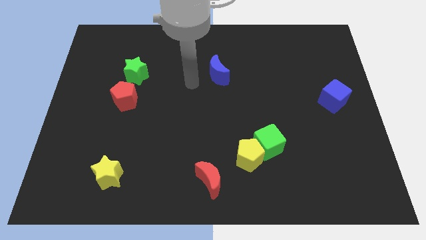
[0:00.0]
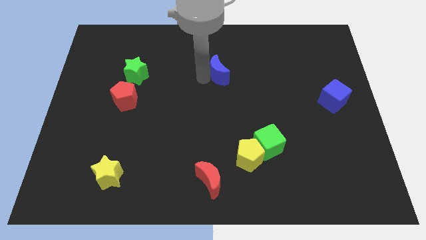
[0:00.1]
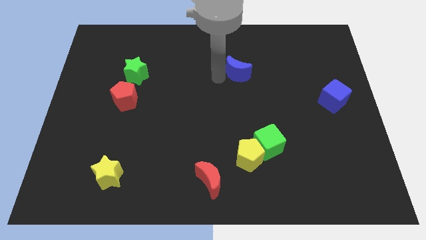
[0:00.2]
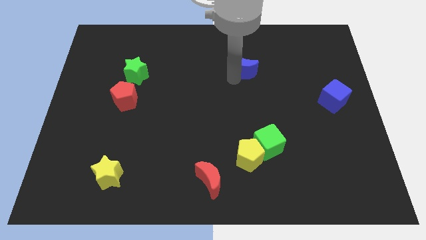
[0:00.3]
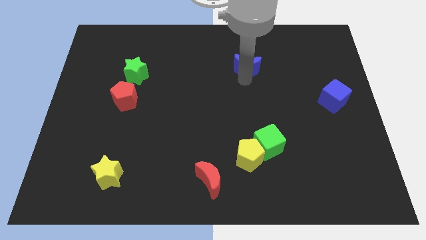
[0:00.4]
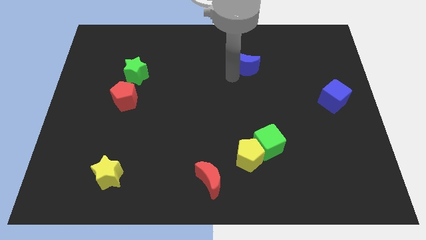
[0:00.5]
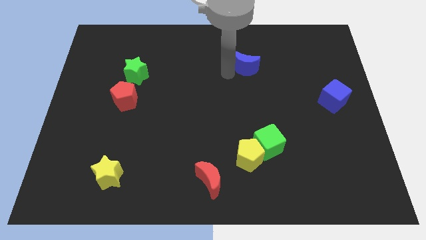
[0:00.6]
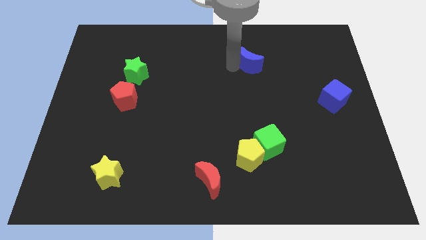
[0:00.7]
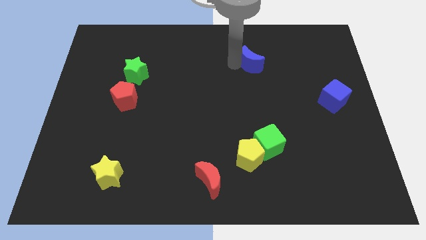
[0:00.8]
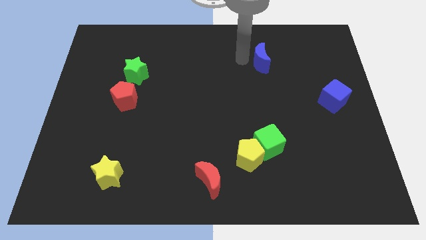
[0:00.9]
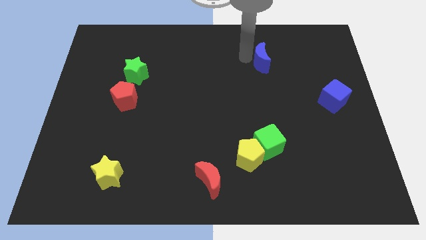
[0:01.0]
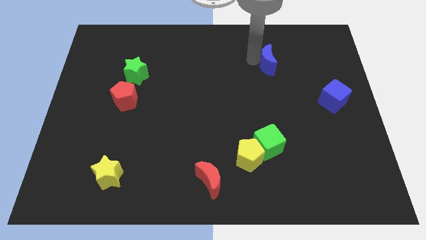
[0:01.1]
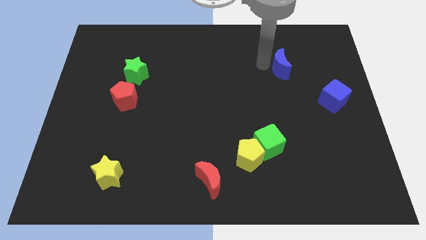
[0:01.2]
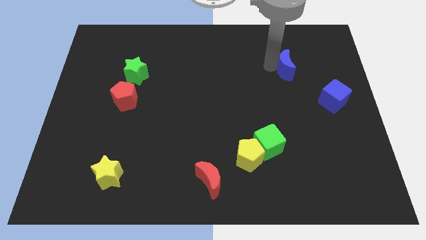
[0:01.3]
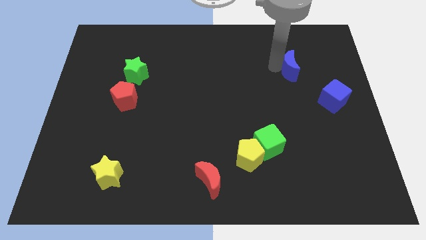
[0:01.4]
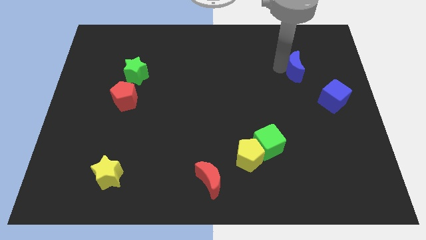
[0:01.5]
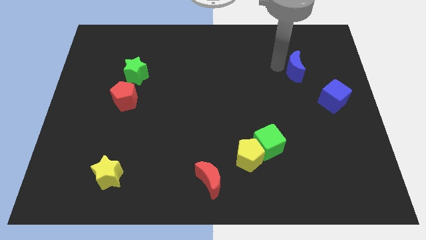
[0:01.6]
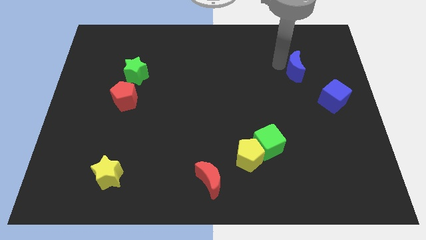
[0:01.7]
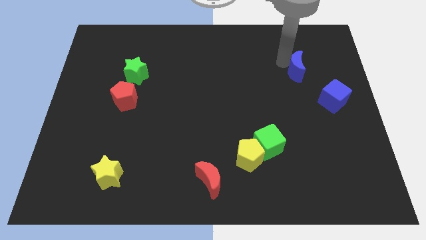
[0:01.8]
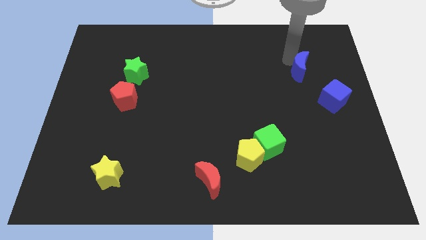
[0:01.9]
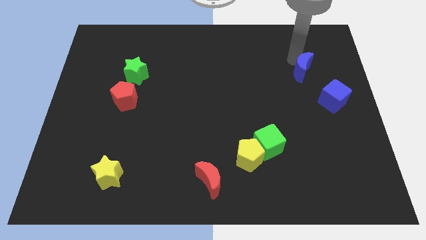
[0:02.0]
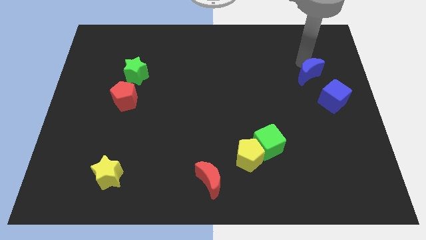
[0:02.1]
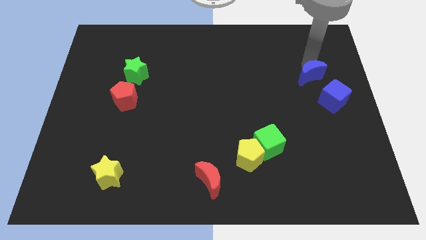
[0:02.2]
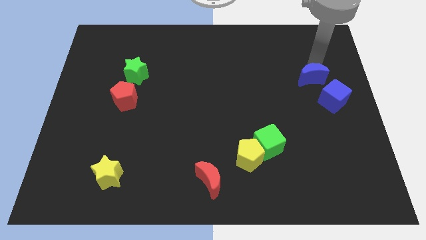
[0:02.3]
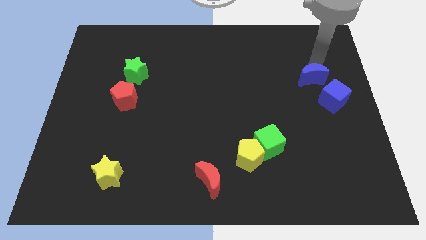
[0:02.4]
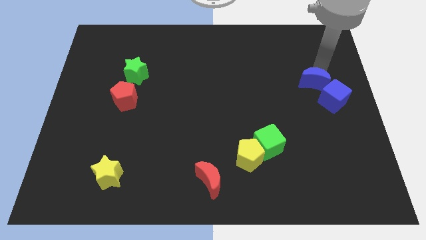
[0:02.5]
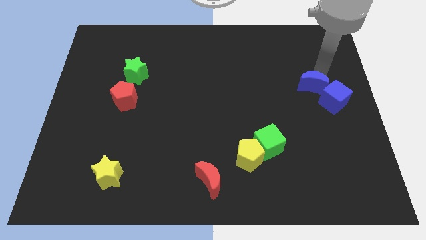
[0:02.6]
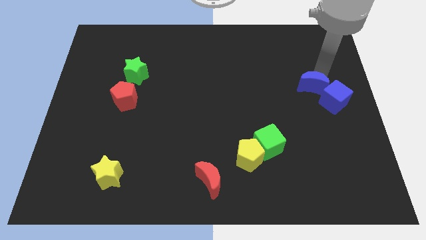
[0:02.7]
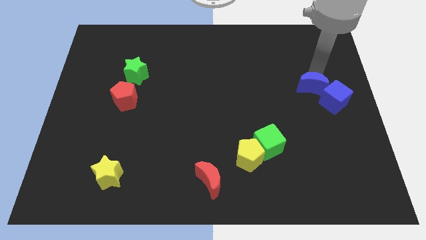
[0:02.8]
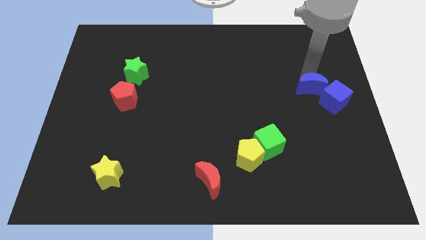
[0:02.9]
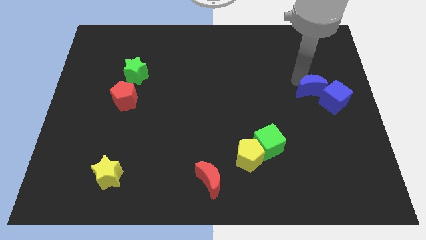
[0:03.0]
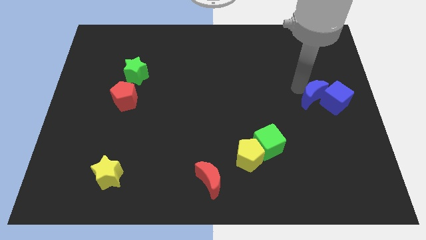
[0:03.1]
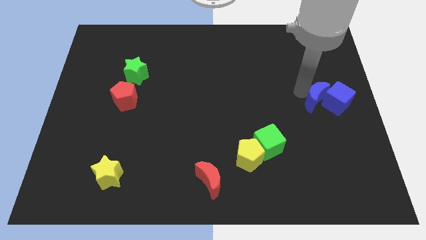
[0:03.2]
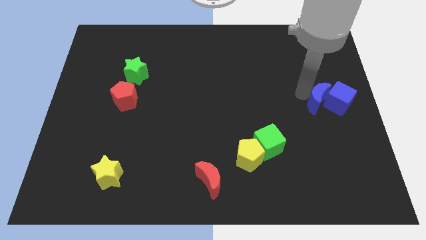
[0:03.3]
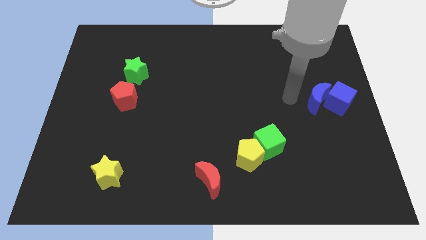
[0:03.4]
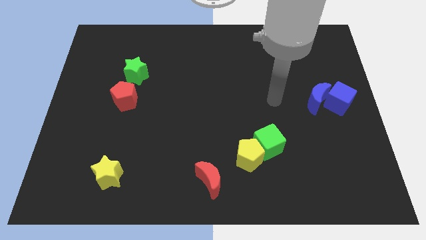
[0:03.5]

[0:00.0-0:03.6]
push the blue moon into the blue cube

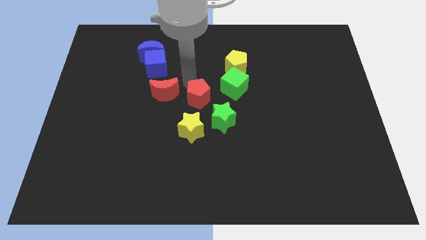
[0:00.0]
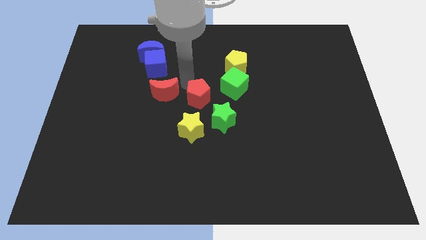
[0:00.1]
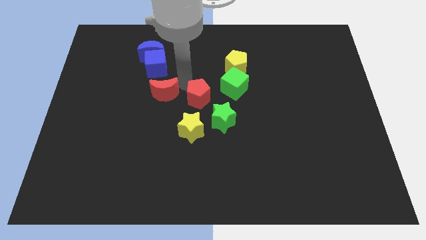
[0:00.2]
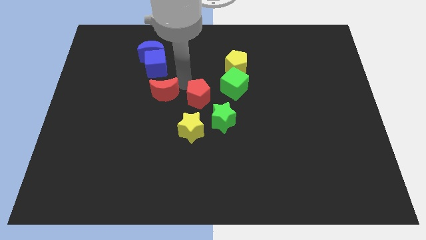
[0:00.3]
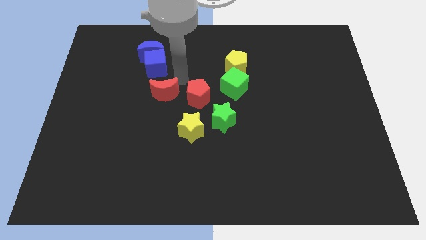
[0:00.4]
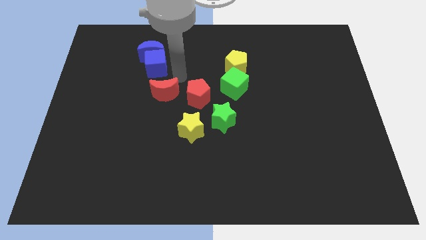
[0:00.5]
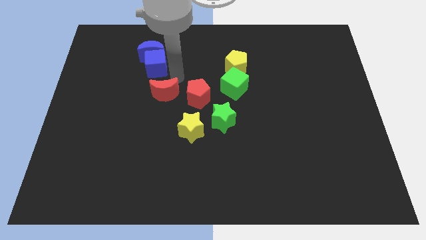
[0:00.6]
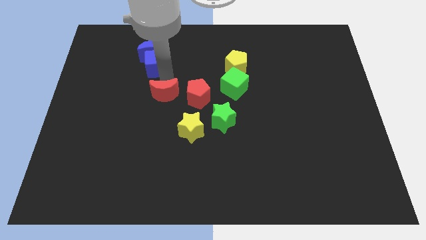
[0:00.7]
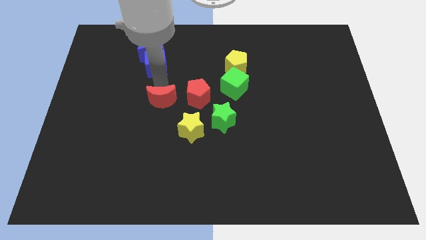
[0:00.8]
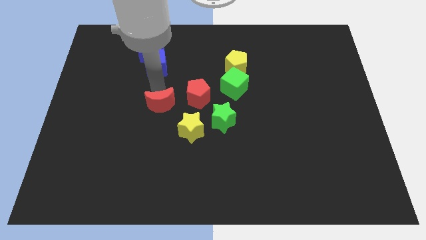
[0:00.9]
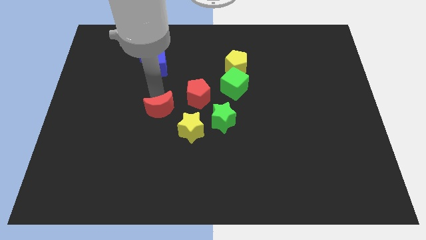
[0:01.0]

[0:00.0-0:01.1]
move the red crescent down slightly

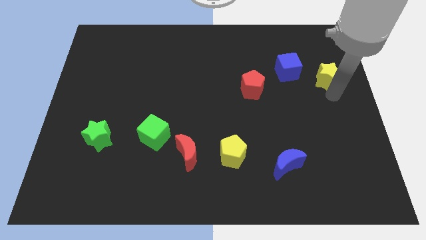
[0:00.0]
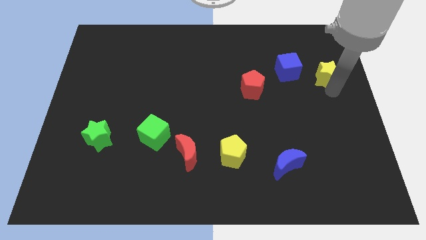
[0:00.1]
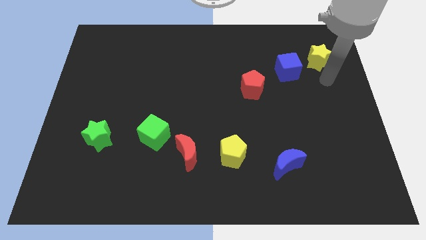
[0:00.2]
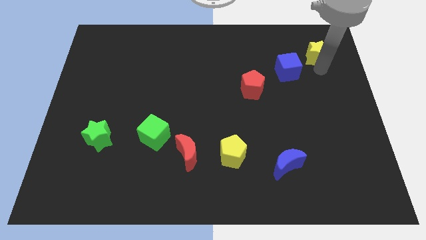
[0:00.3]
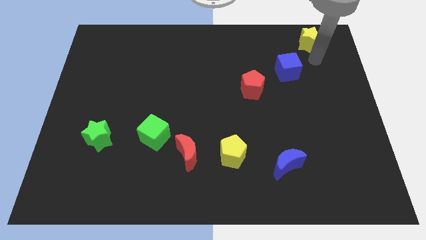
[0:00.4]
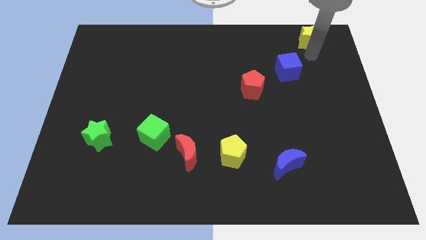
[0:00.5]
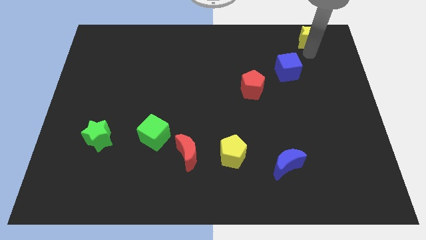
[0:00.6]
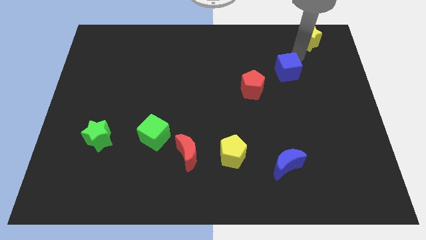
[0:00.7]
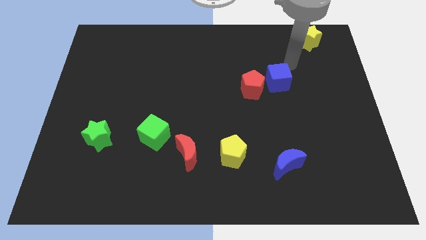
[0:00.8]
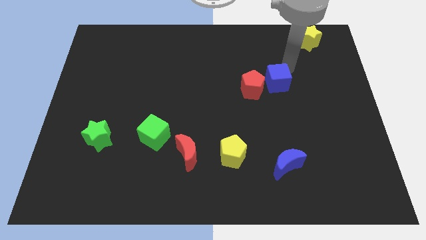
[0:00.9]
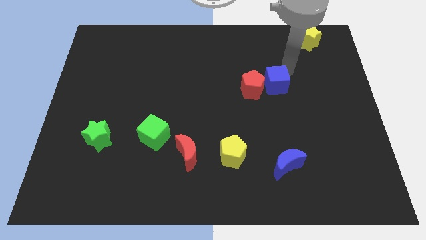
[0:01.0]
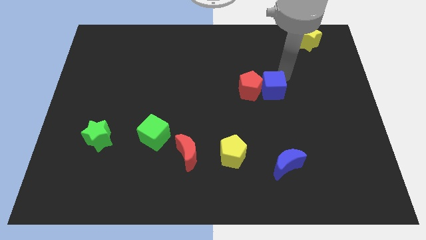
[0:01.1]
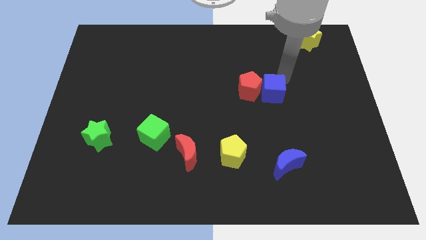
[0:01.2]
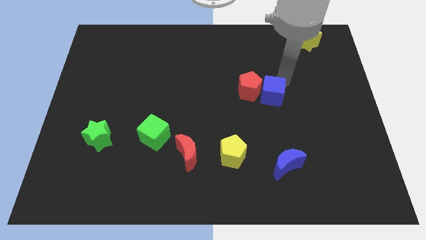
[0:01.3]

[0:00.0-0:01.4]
push the blue cube into the red pentagon

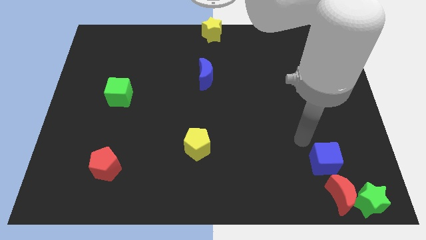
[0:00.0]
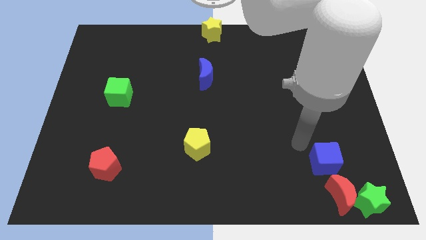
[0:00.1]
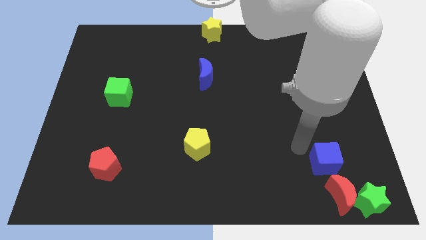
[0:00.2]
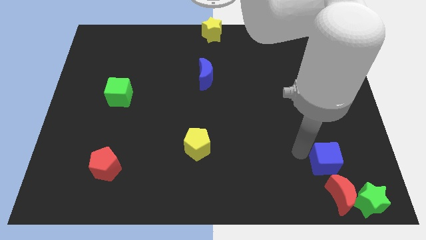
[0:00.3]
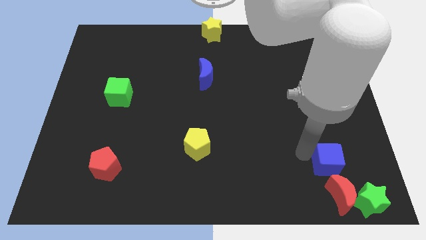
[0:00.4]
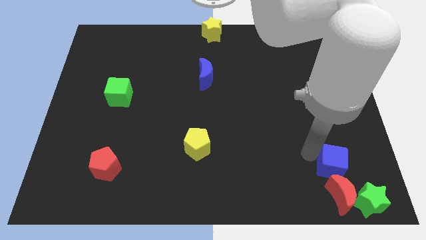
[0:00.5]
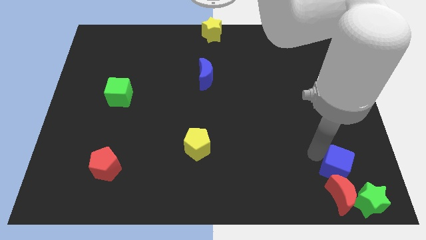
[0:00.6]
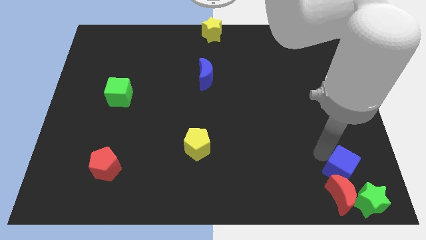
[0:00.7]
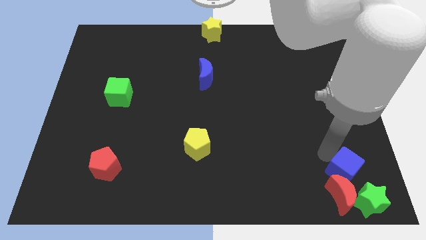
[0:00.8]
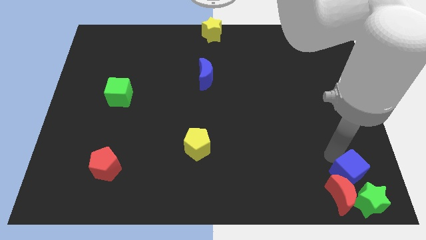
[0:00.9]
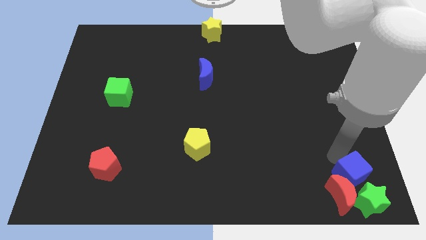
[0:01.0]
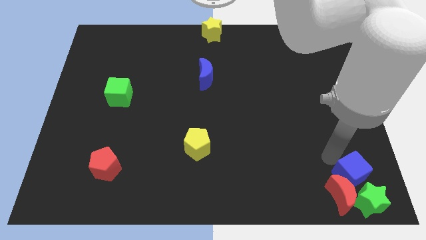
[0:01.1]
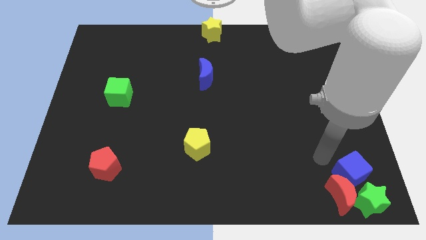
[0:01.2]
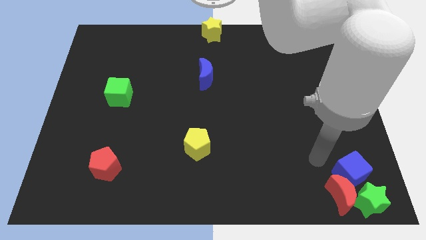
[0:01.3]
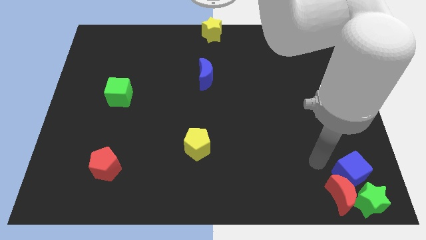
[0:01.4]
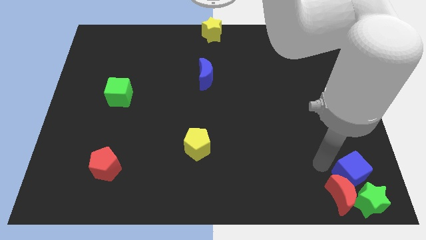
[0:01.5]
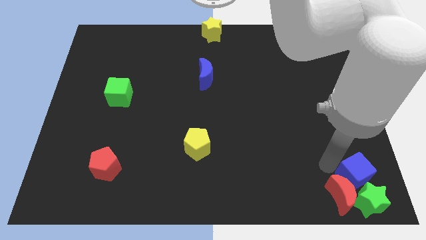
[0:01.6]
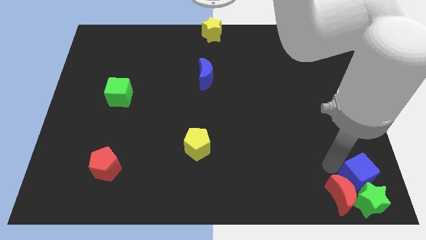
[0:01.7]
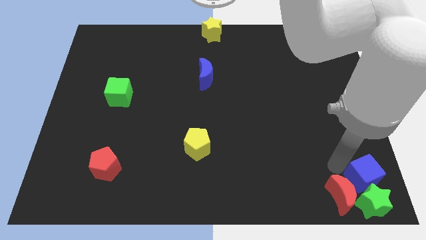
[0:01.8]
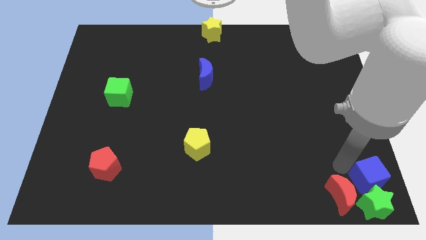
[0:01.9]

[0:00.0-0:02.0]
push the blue cube into the green star

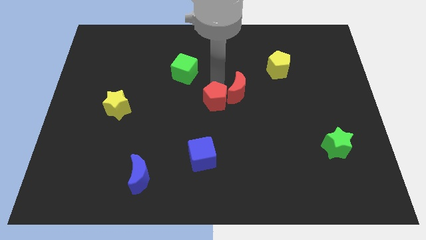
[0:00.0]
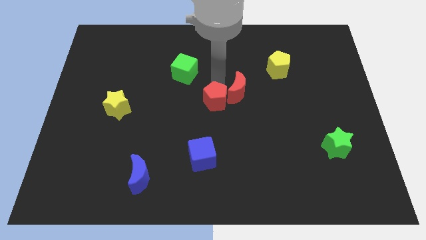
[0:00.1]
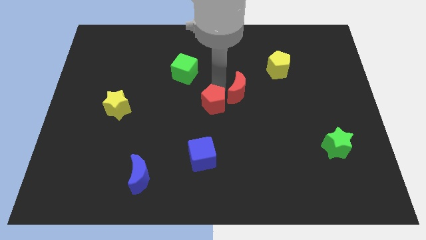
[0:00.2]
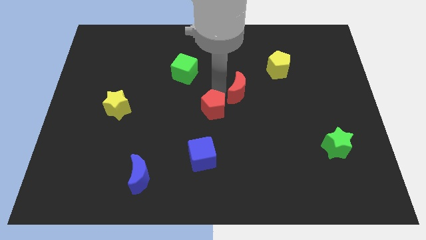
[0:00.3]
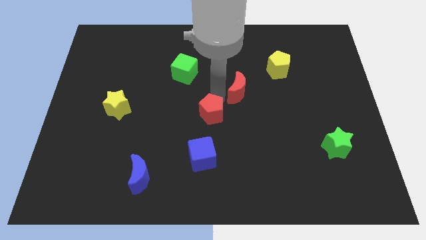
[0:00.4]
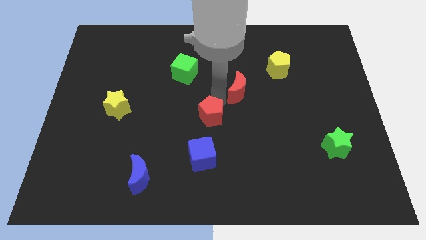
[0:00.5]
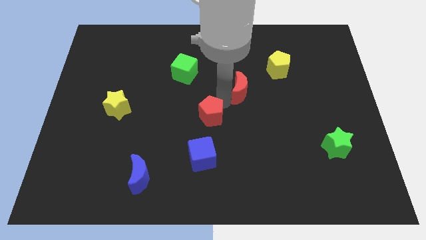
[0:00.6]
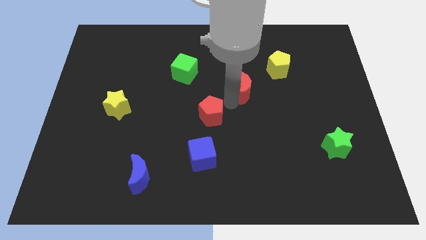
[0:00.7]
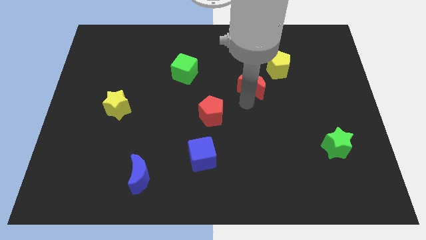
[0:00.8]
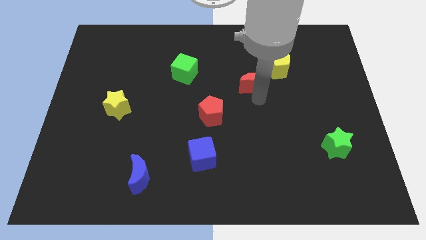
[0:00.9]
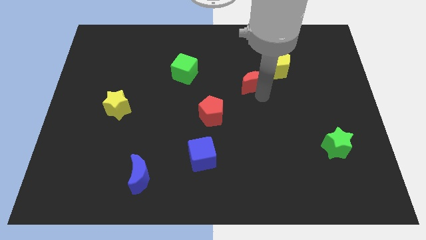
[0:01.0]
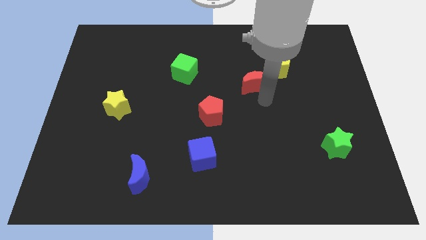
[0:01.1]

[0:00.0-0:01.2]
separate the red blocks
